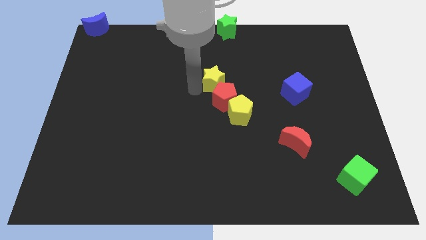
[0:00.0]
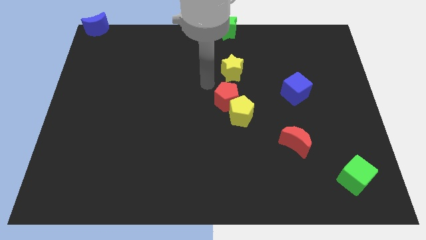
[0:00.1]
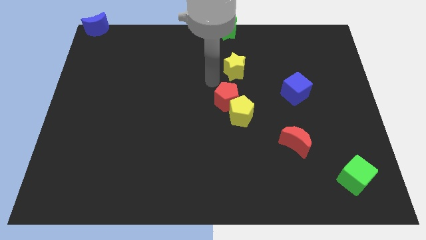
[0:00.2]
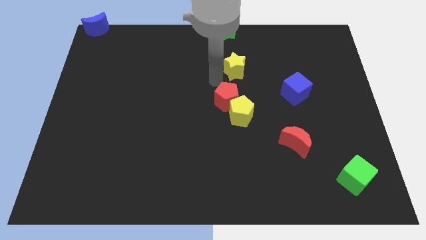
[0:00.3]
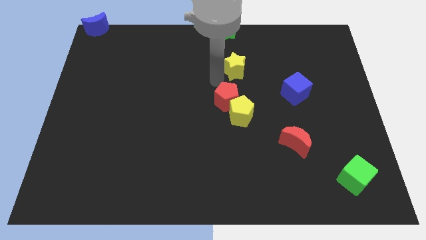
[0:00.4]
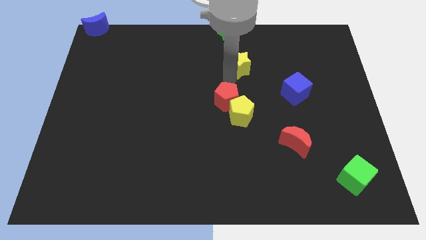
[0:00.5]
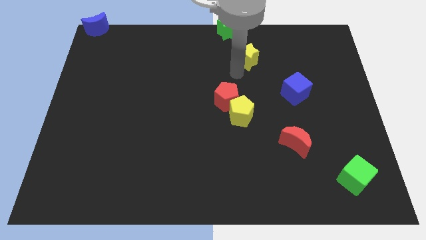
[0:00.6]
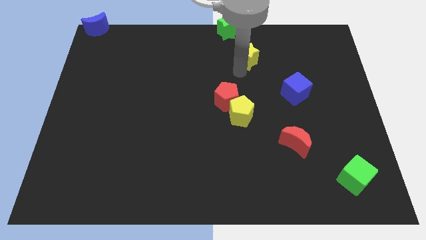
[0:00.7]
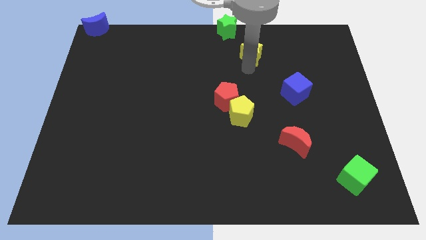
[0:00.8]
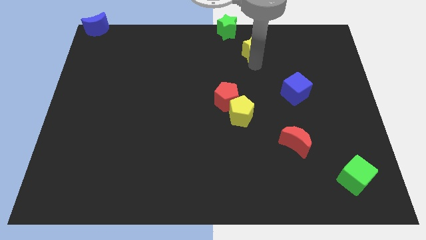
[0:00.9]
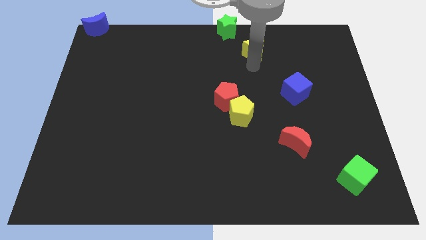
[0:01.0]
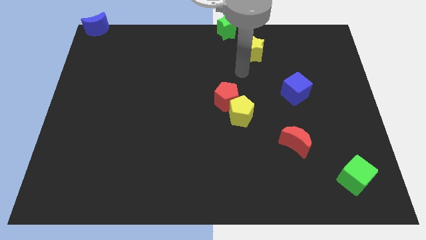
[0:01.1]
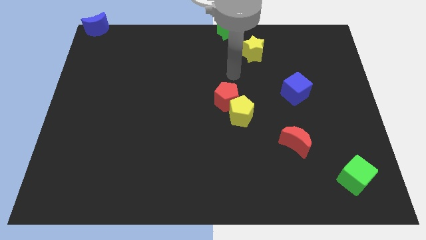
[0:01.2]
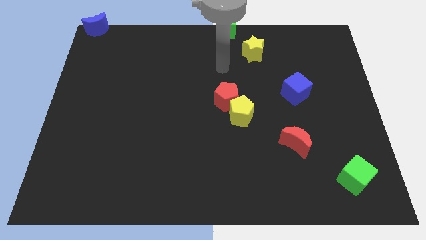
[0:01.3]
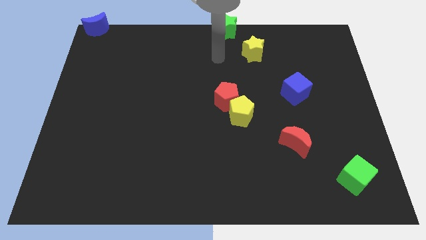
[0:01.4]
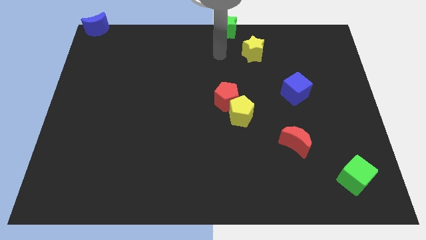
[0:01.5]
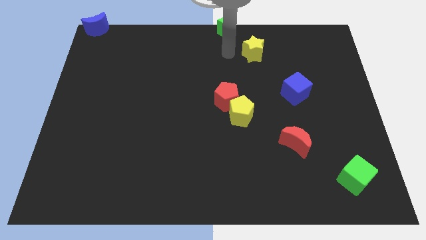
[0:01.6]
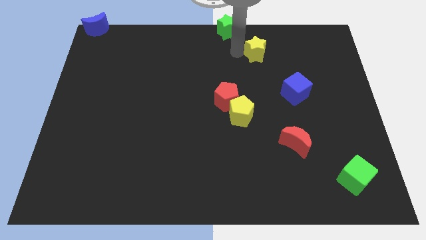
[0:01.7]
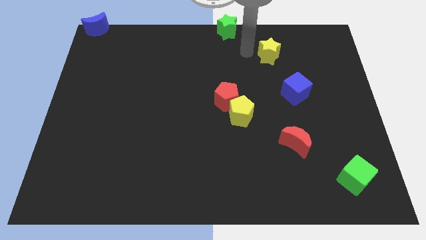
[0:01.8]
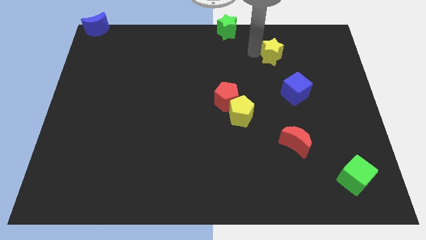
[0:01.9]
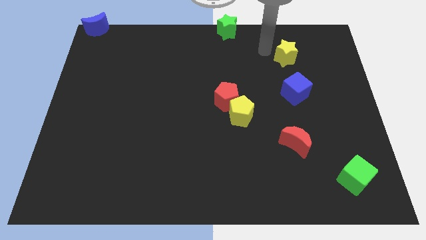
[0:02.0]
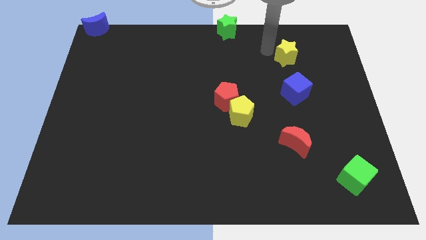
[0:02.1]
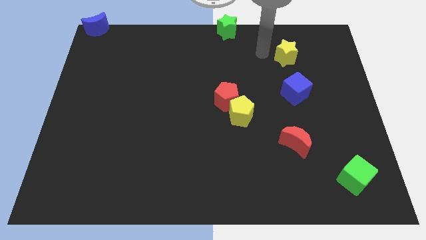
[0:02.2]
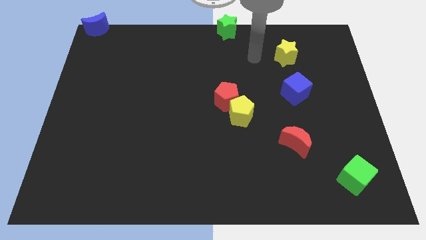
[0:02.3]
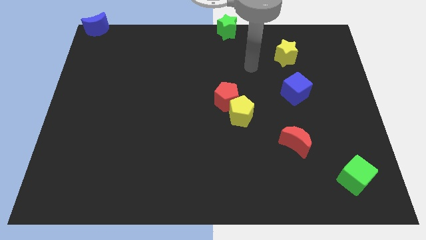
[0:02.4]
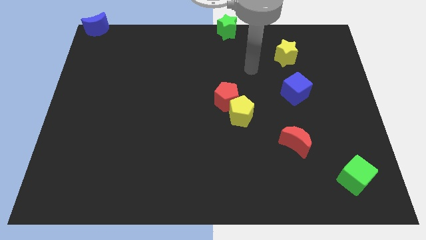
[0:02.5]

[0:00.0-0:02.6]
move the yellow star above blue cube

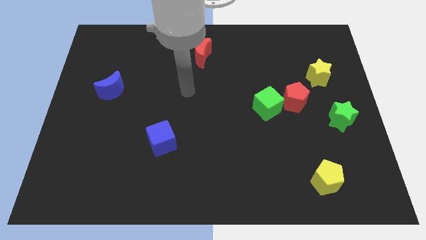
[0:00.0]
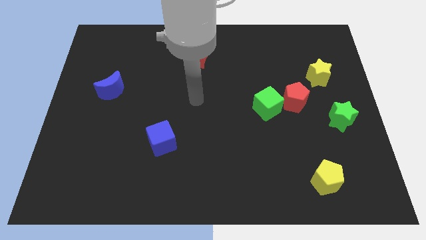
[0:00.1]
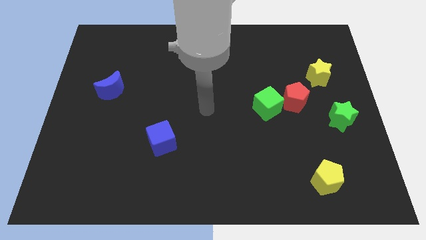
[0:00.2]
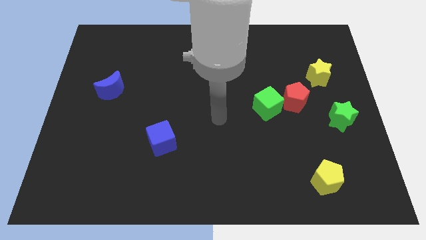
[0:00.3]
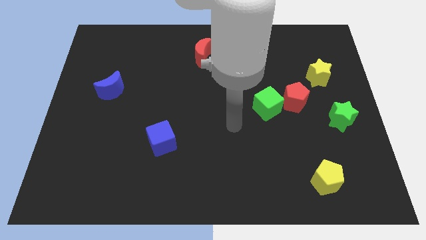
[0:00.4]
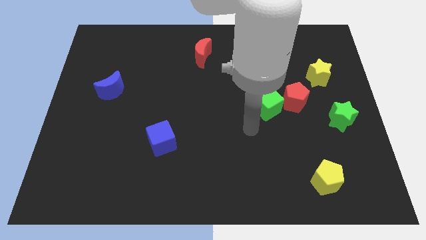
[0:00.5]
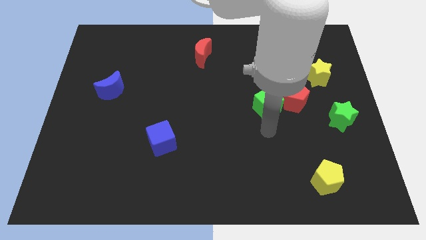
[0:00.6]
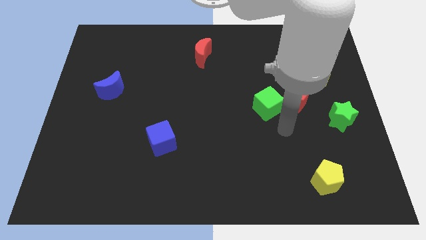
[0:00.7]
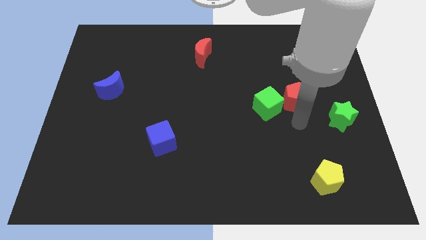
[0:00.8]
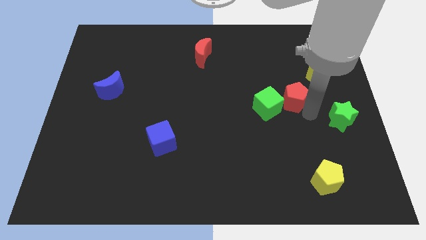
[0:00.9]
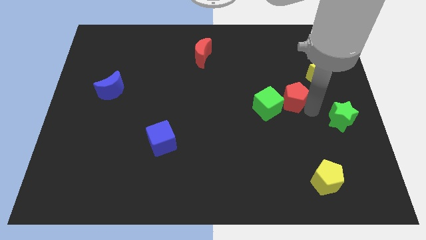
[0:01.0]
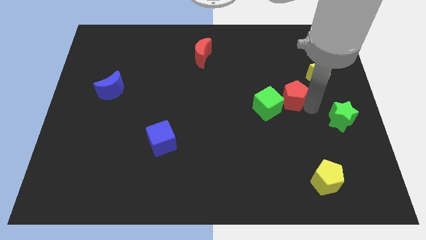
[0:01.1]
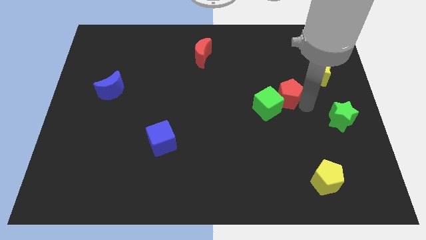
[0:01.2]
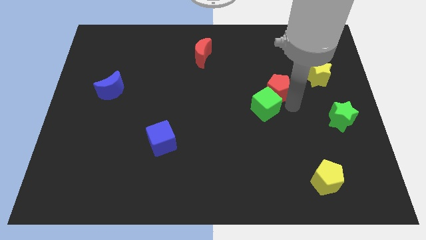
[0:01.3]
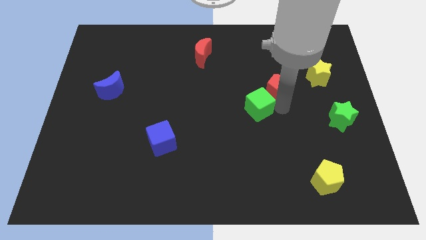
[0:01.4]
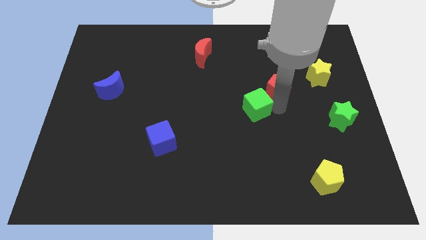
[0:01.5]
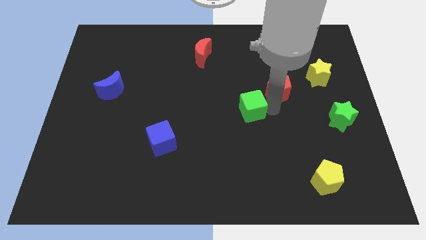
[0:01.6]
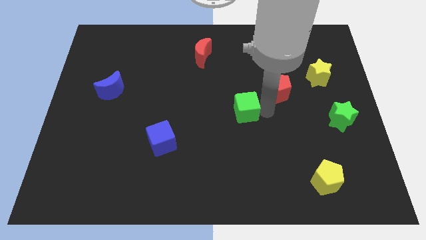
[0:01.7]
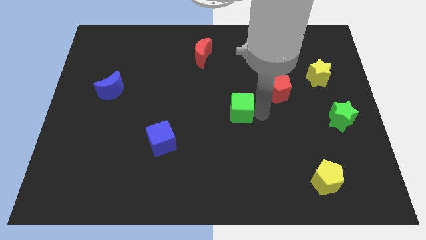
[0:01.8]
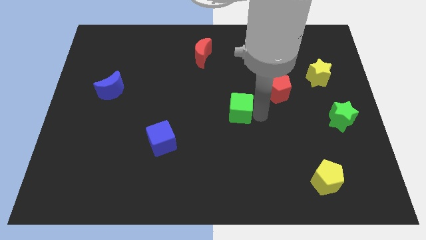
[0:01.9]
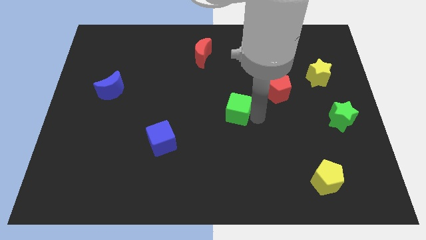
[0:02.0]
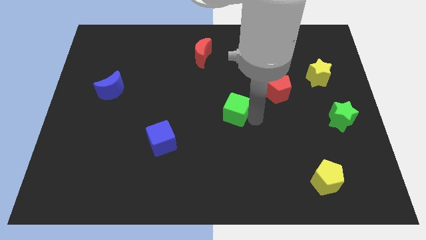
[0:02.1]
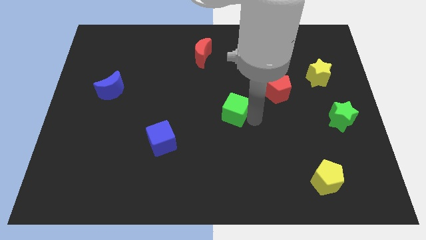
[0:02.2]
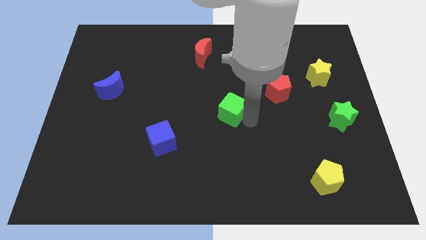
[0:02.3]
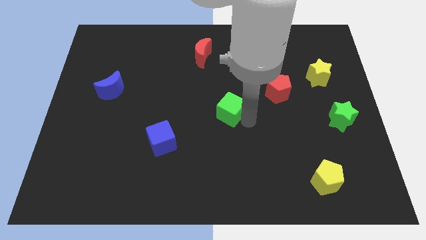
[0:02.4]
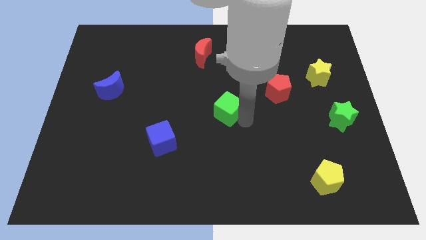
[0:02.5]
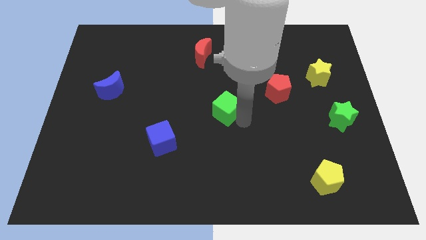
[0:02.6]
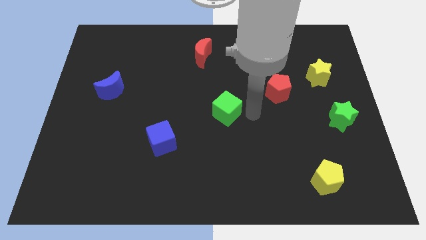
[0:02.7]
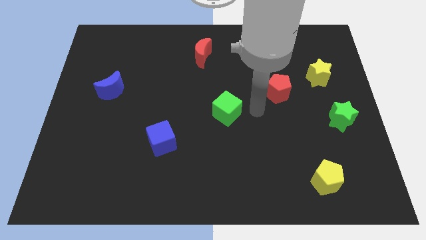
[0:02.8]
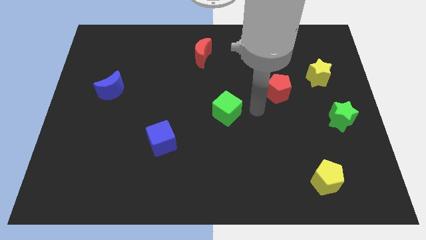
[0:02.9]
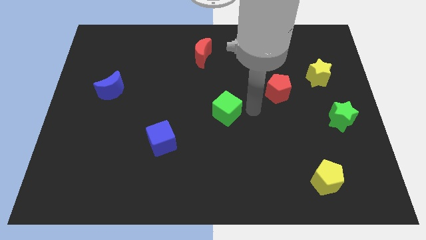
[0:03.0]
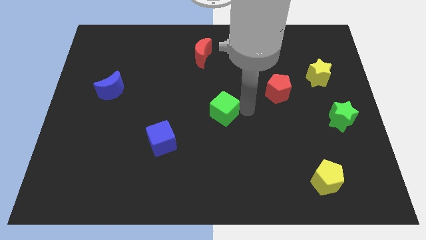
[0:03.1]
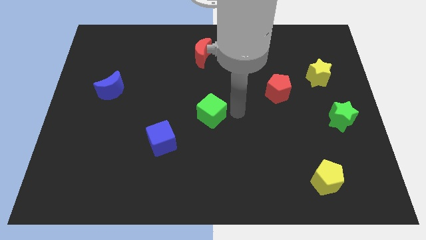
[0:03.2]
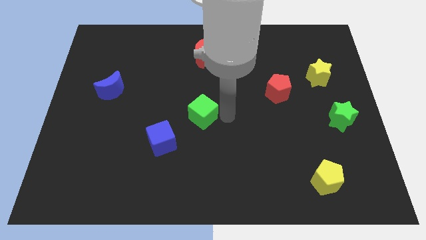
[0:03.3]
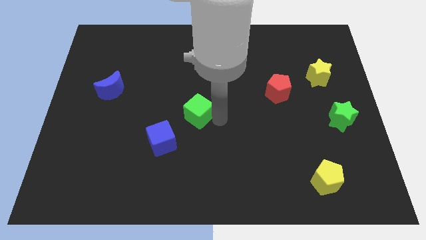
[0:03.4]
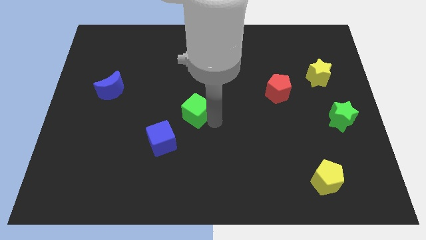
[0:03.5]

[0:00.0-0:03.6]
separate green cube from red pentagon

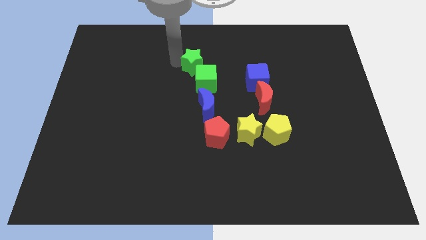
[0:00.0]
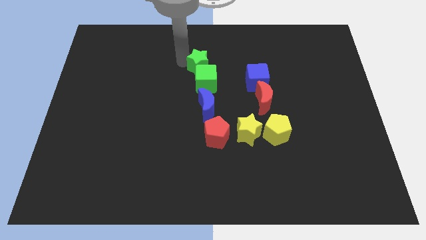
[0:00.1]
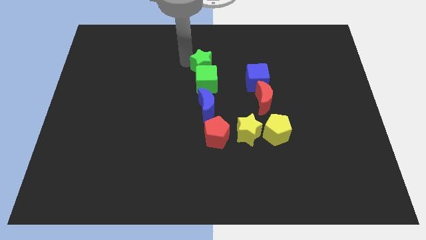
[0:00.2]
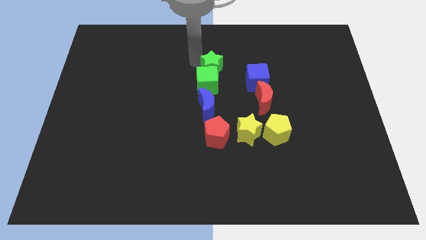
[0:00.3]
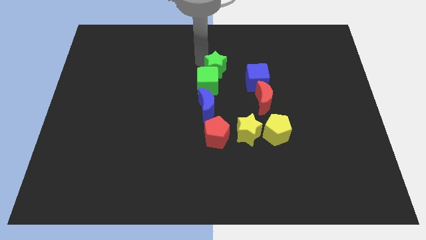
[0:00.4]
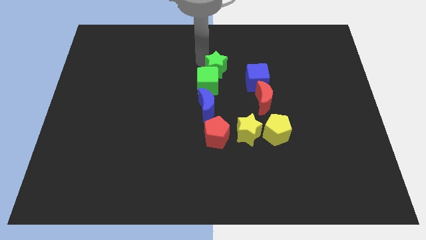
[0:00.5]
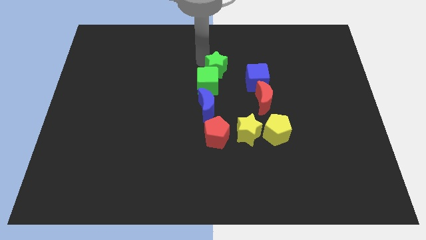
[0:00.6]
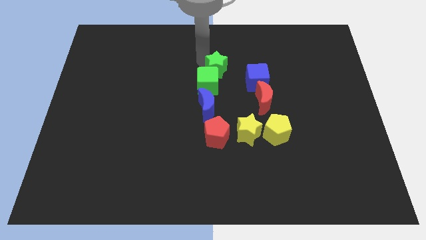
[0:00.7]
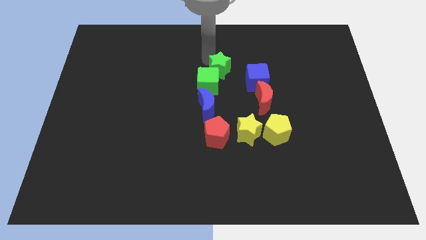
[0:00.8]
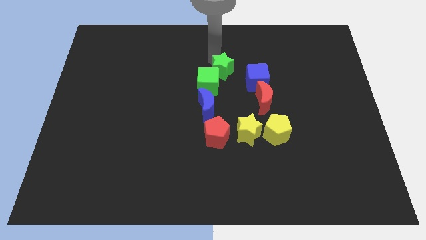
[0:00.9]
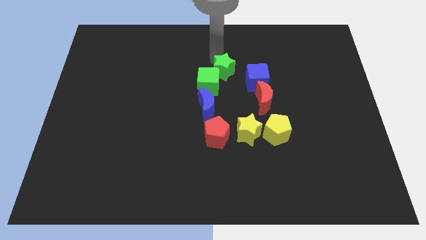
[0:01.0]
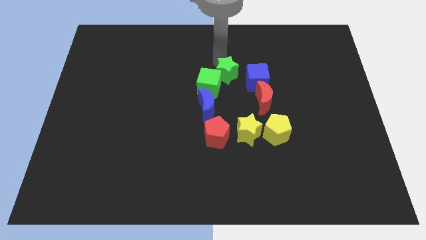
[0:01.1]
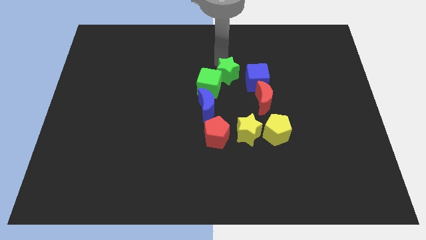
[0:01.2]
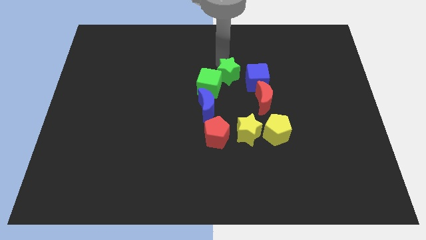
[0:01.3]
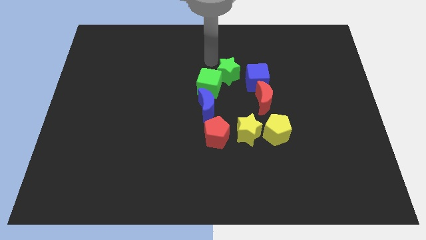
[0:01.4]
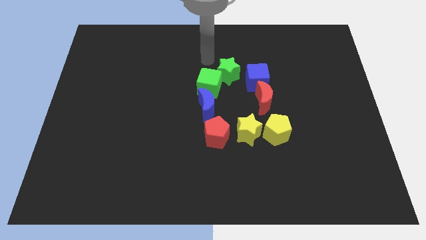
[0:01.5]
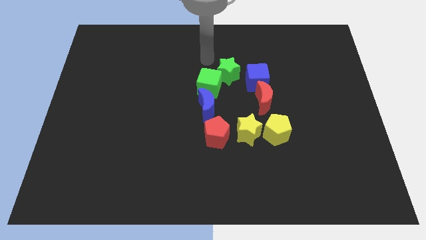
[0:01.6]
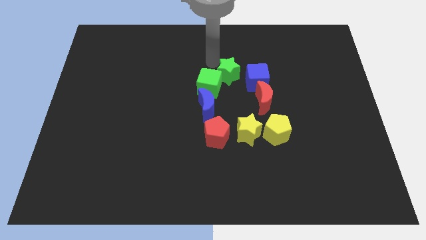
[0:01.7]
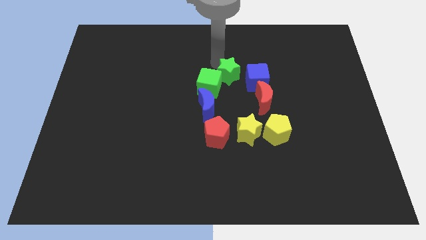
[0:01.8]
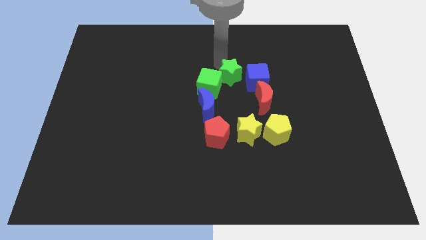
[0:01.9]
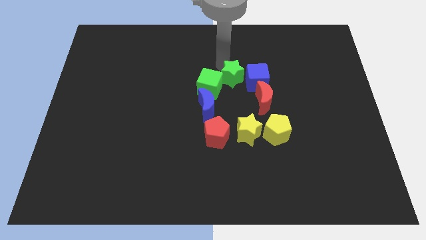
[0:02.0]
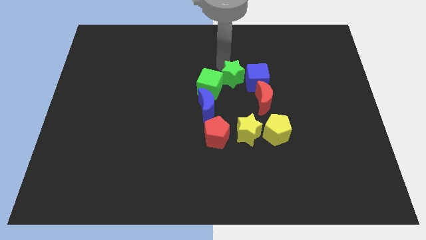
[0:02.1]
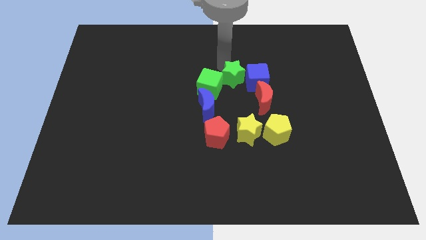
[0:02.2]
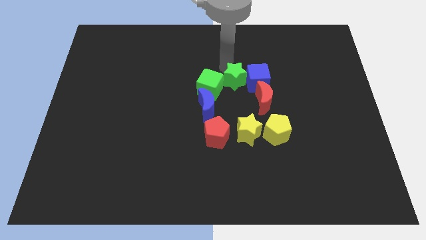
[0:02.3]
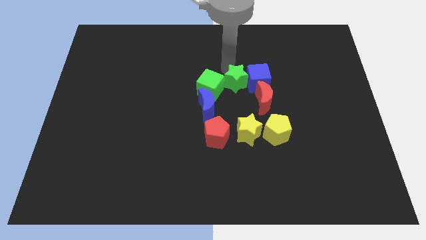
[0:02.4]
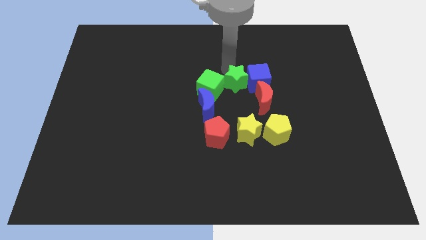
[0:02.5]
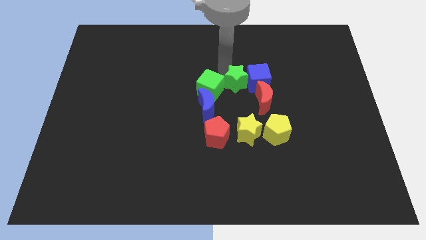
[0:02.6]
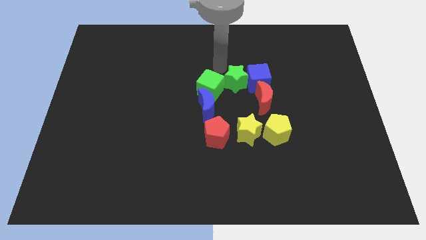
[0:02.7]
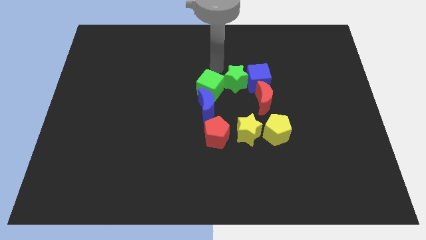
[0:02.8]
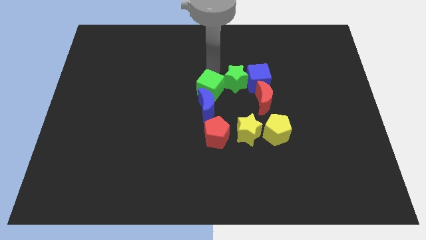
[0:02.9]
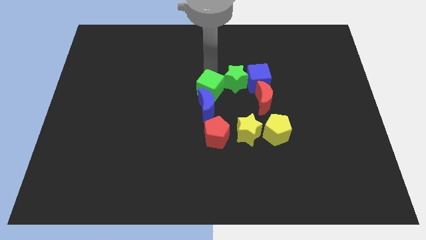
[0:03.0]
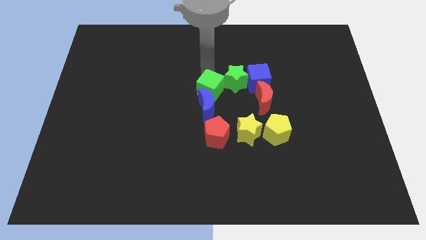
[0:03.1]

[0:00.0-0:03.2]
place the green star left to the blue cube
